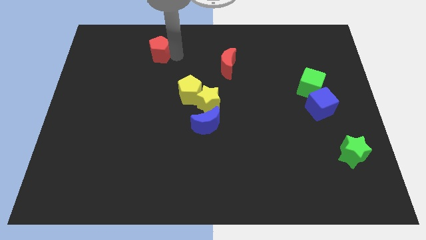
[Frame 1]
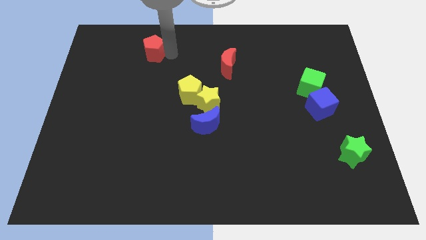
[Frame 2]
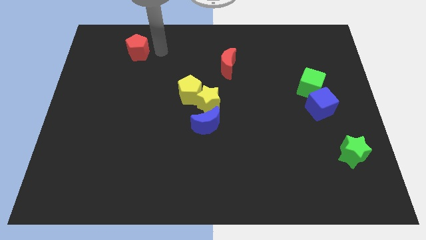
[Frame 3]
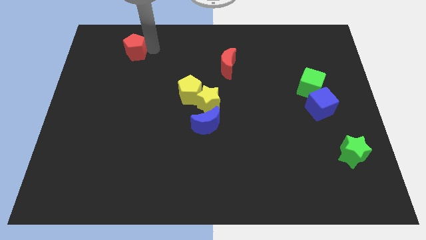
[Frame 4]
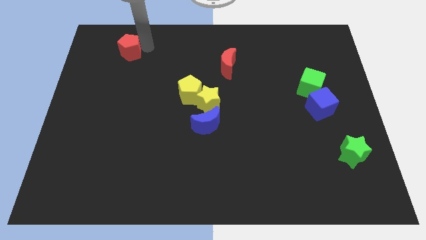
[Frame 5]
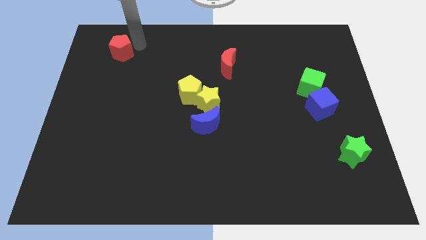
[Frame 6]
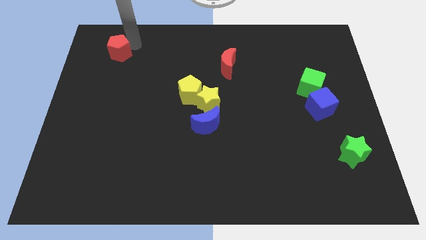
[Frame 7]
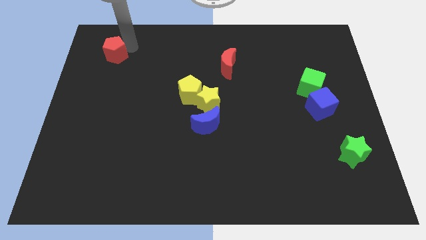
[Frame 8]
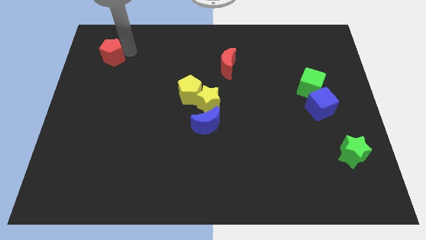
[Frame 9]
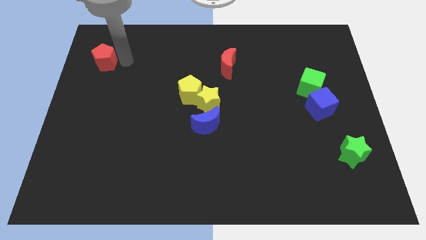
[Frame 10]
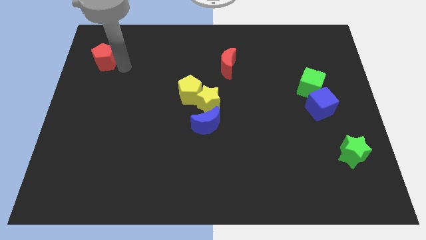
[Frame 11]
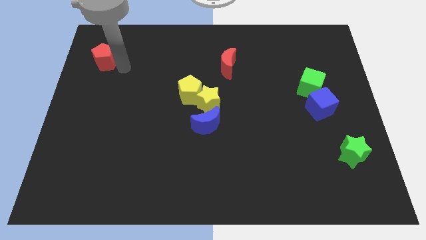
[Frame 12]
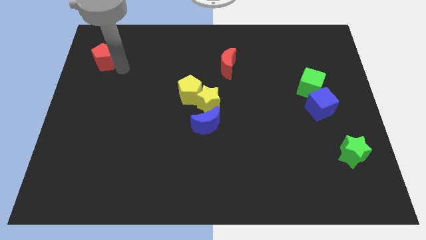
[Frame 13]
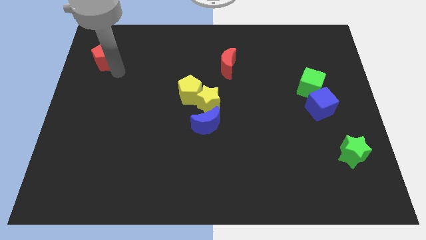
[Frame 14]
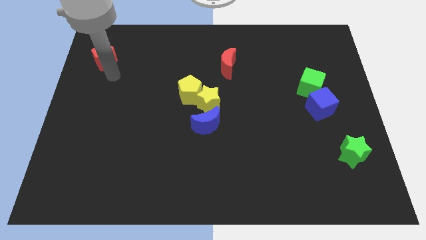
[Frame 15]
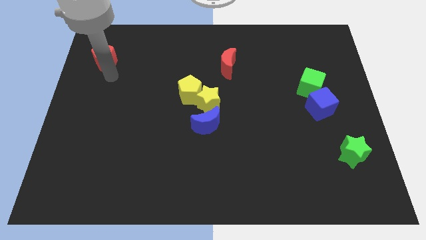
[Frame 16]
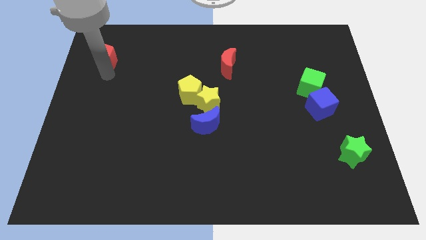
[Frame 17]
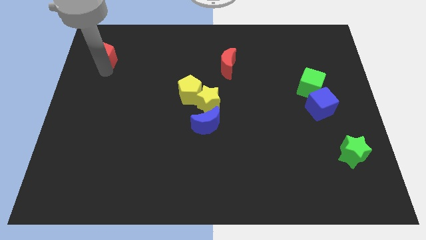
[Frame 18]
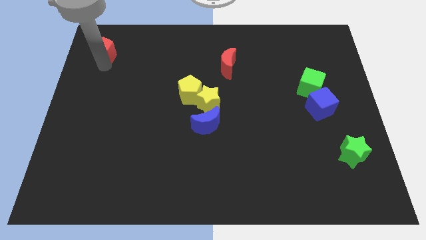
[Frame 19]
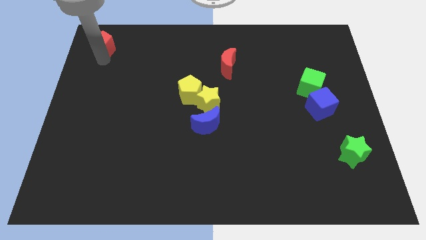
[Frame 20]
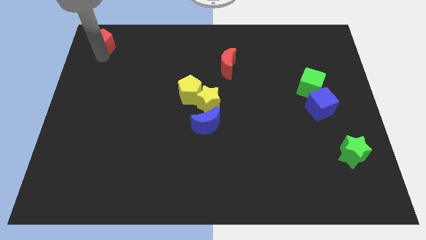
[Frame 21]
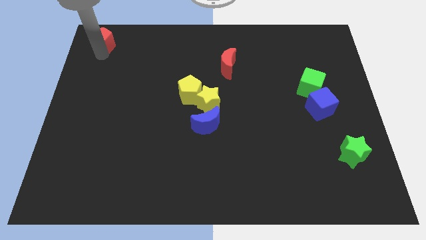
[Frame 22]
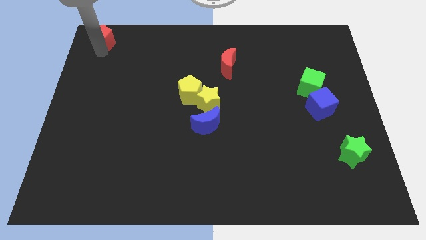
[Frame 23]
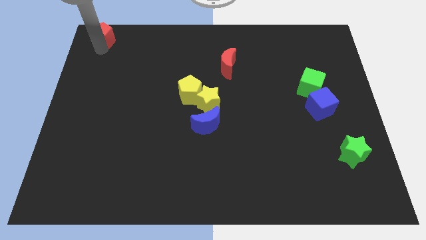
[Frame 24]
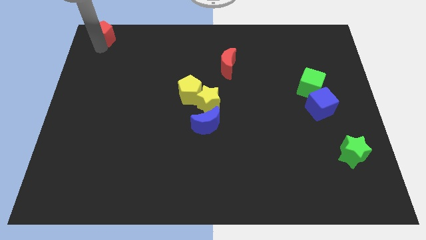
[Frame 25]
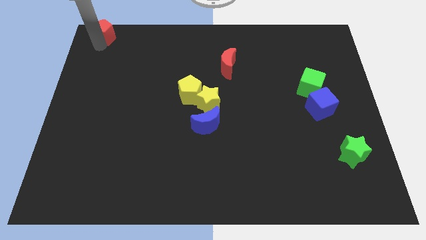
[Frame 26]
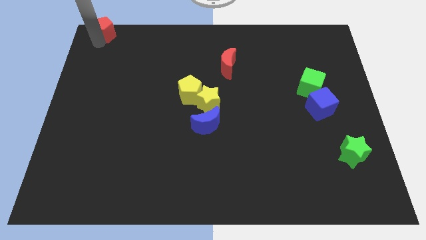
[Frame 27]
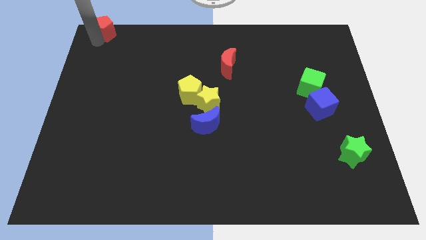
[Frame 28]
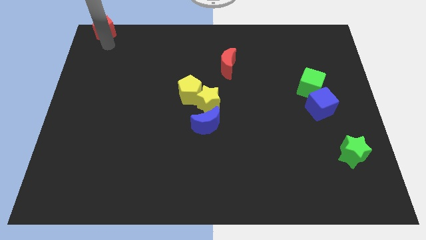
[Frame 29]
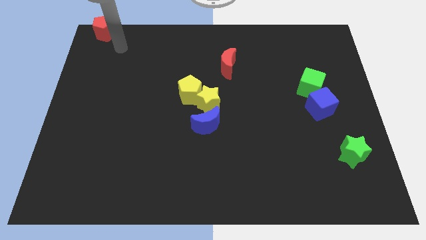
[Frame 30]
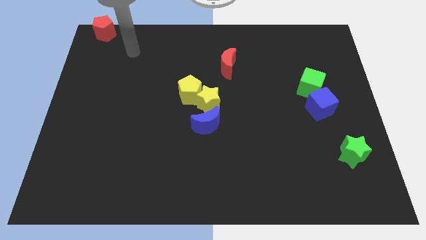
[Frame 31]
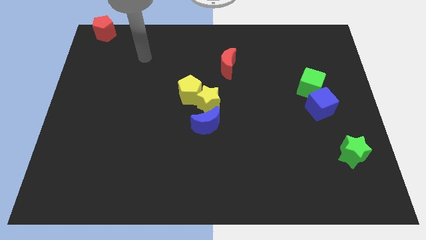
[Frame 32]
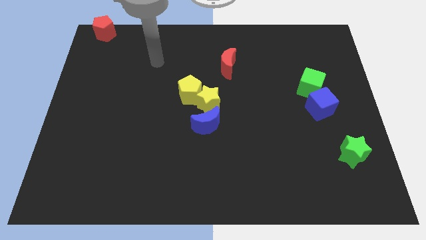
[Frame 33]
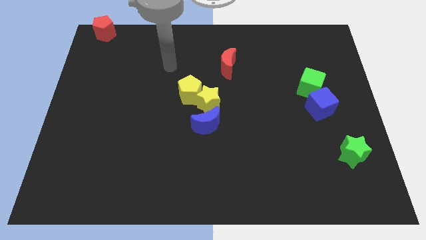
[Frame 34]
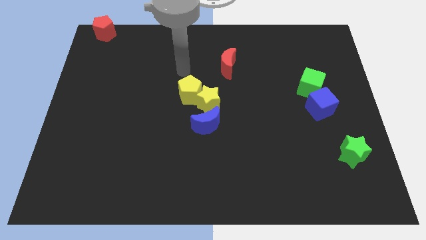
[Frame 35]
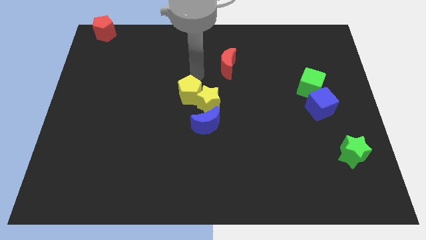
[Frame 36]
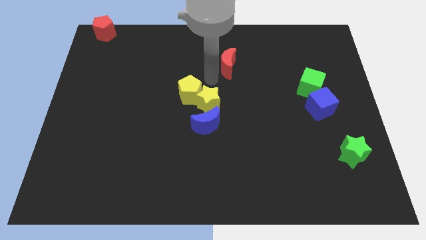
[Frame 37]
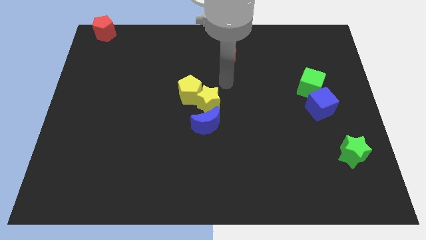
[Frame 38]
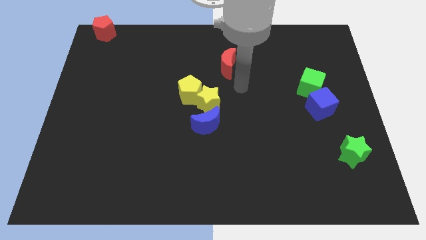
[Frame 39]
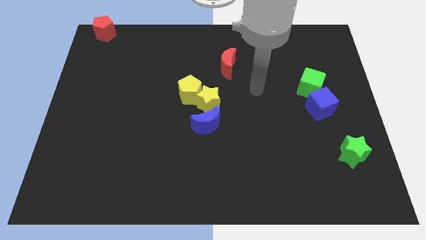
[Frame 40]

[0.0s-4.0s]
place the red pentagon at the top left corner of the board

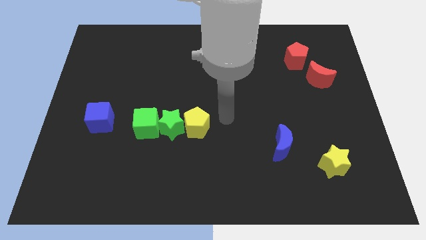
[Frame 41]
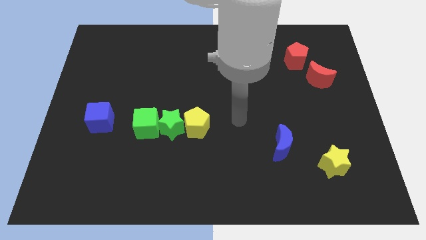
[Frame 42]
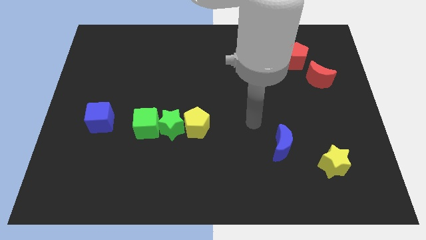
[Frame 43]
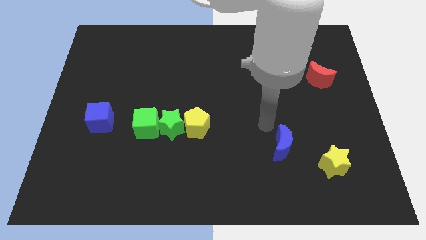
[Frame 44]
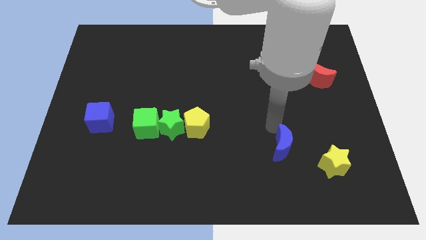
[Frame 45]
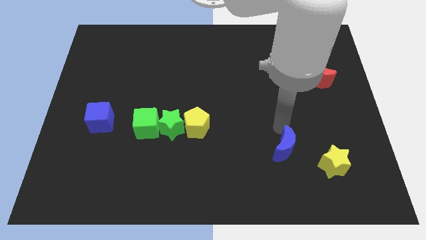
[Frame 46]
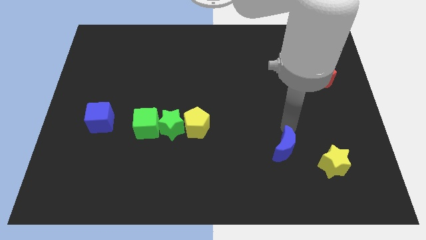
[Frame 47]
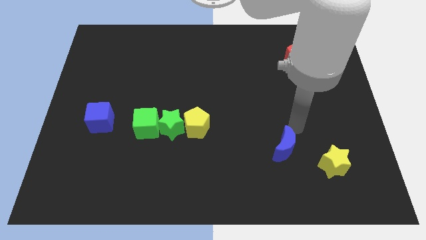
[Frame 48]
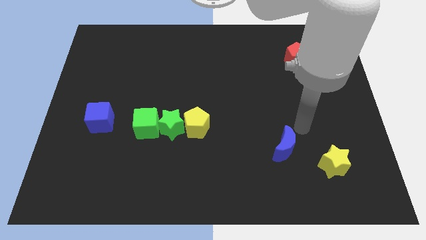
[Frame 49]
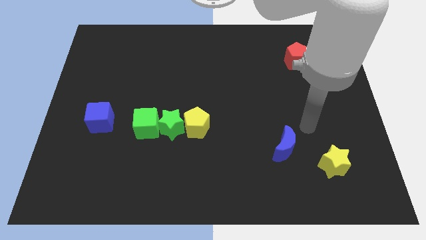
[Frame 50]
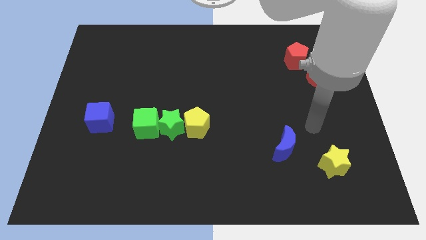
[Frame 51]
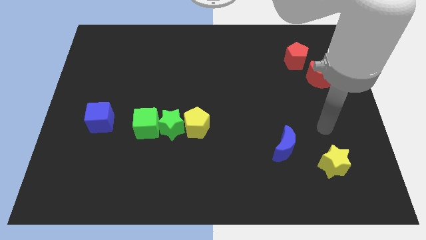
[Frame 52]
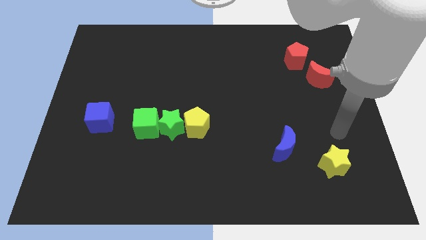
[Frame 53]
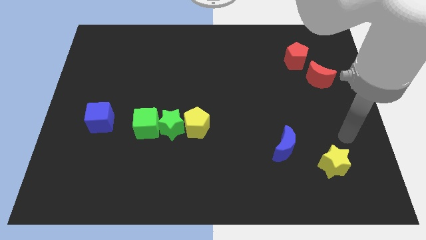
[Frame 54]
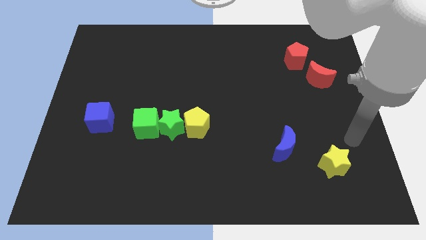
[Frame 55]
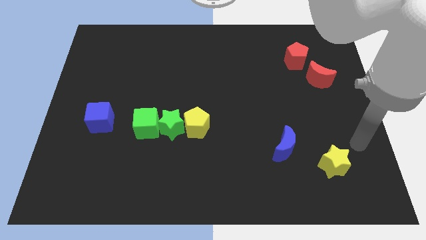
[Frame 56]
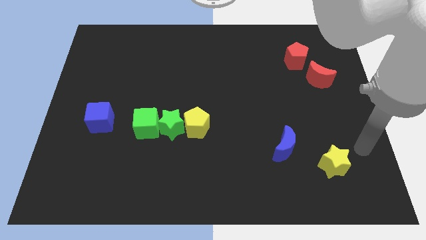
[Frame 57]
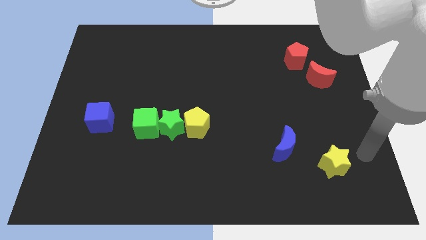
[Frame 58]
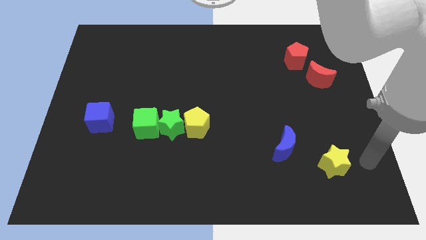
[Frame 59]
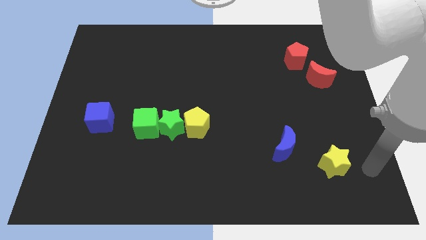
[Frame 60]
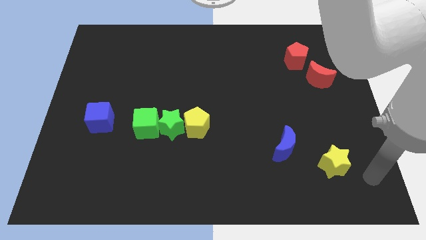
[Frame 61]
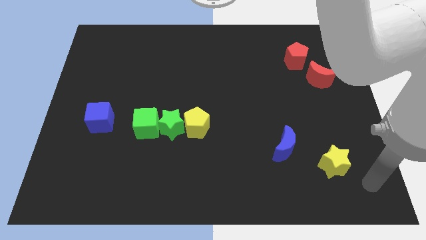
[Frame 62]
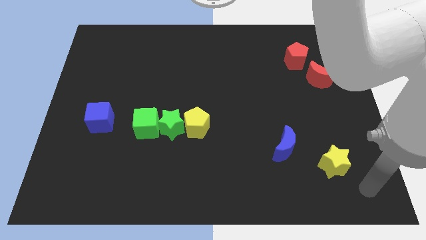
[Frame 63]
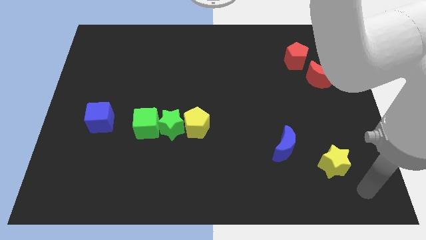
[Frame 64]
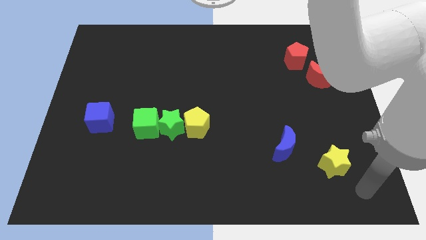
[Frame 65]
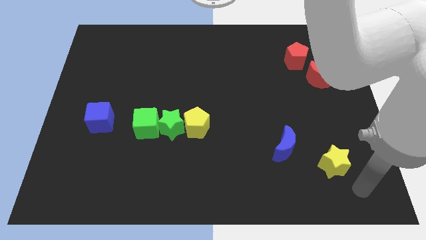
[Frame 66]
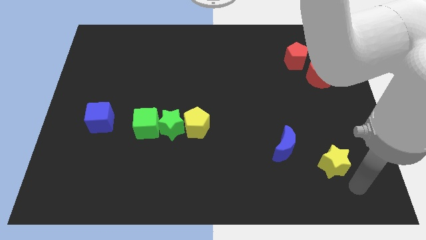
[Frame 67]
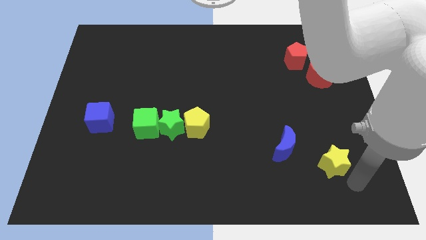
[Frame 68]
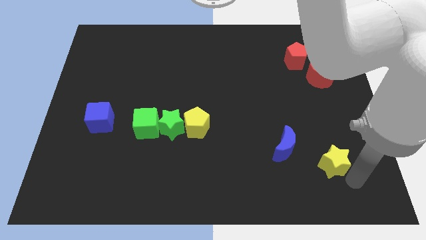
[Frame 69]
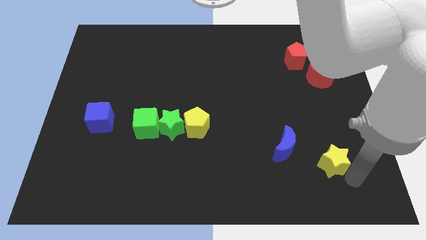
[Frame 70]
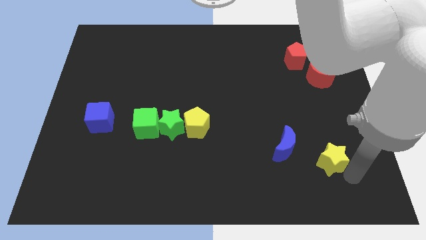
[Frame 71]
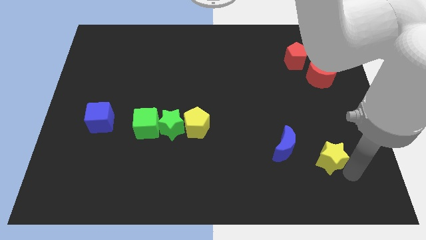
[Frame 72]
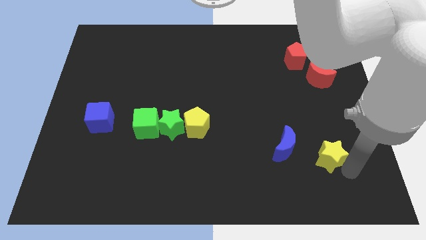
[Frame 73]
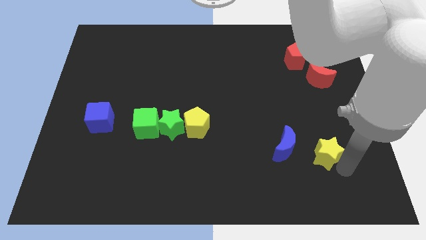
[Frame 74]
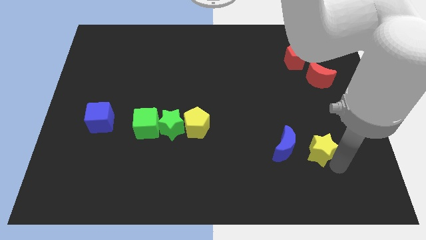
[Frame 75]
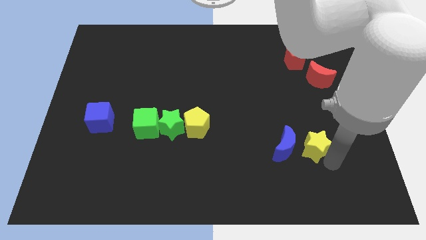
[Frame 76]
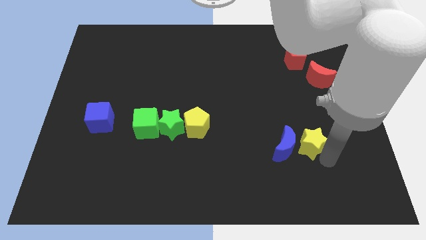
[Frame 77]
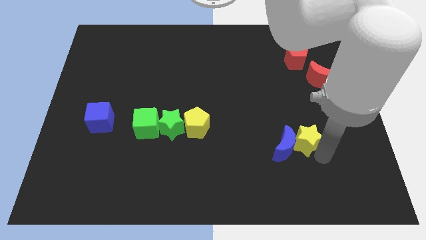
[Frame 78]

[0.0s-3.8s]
push the yellow star into the blue moon

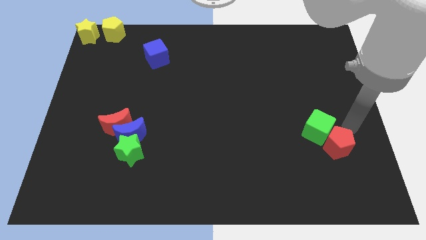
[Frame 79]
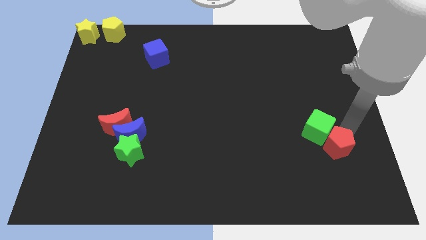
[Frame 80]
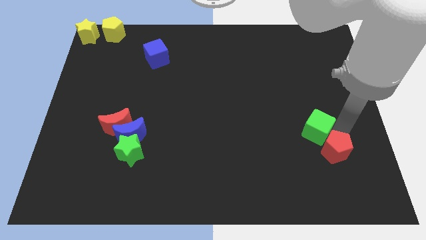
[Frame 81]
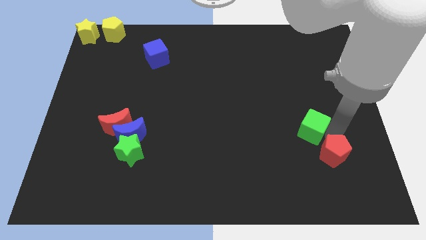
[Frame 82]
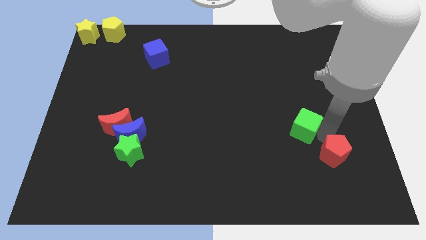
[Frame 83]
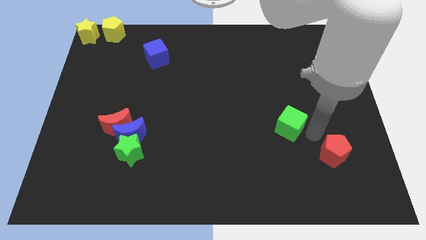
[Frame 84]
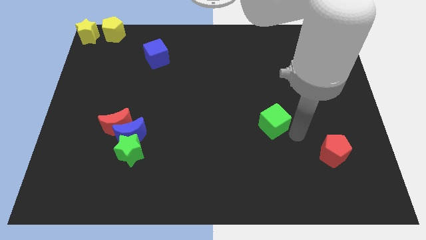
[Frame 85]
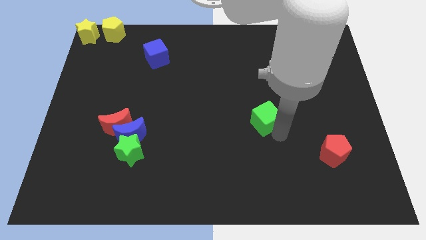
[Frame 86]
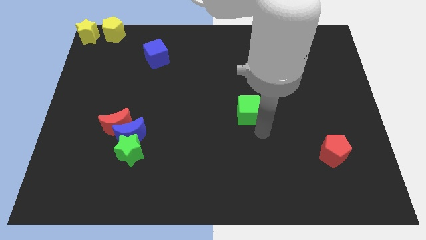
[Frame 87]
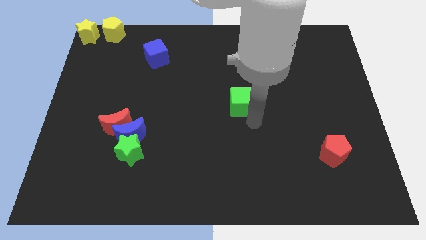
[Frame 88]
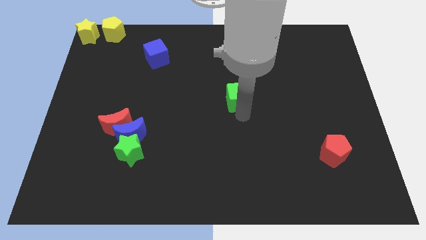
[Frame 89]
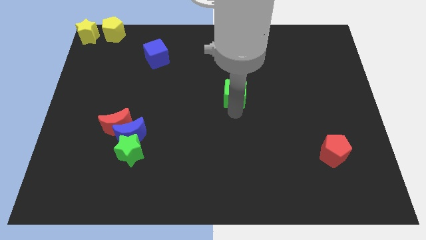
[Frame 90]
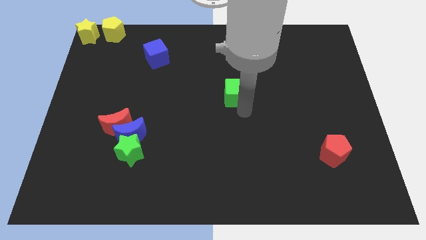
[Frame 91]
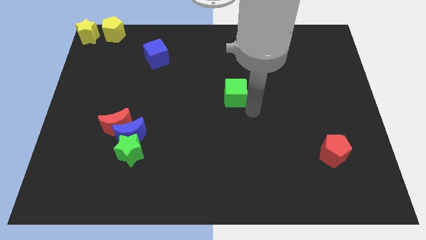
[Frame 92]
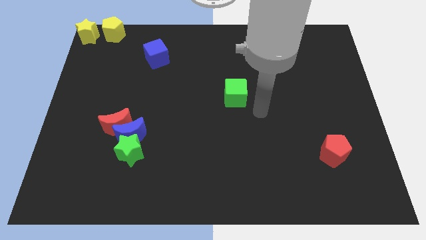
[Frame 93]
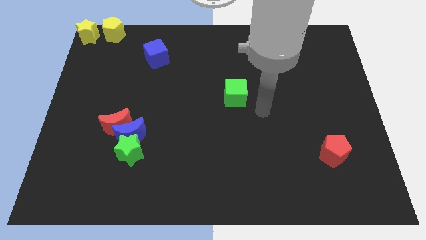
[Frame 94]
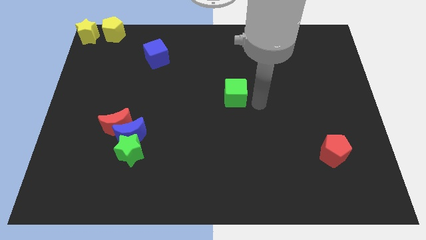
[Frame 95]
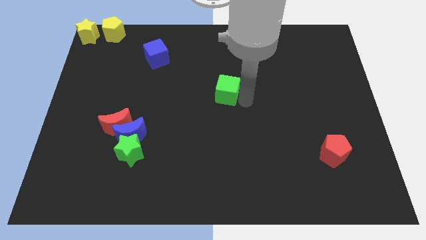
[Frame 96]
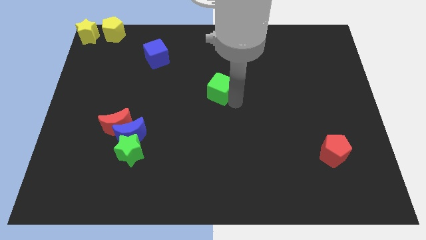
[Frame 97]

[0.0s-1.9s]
separate the green cube from the red pentagon
